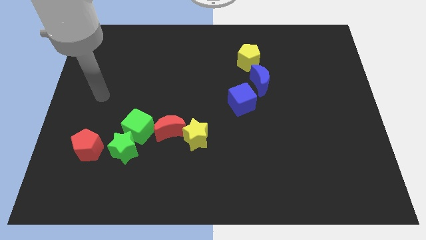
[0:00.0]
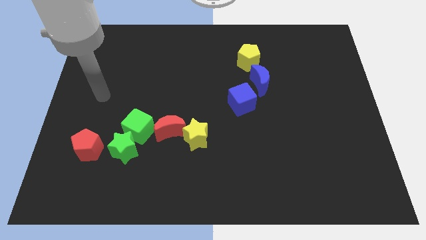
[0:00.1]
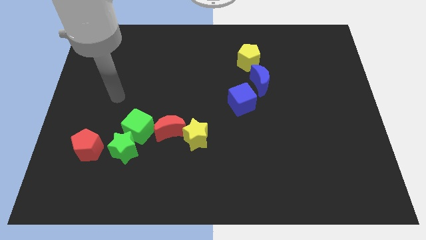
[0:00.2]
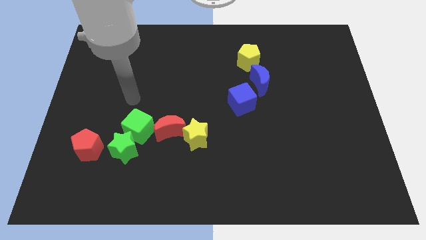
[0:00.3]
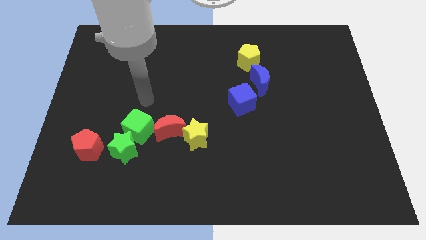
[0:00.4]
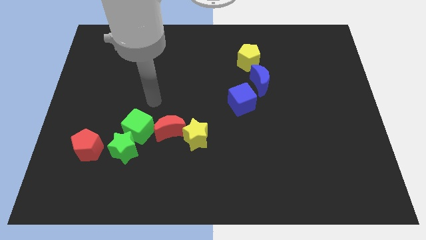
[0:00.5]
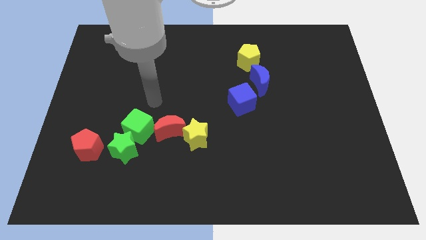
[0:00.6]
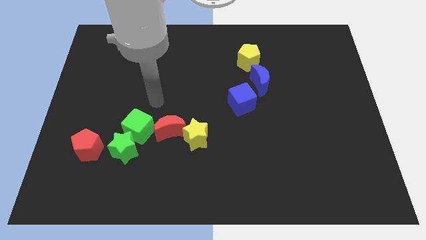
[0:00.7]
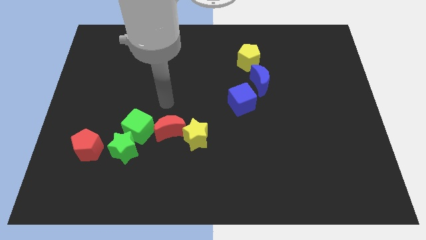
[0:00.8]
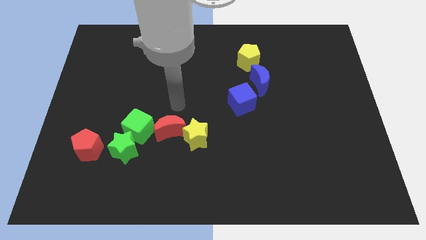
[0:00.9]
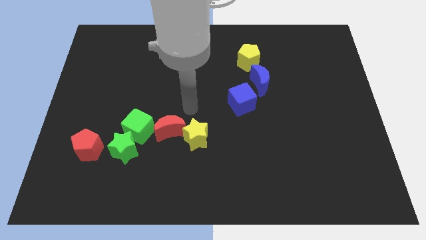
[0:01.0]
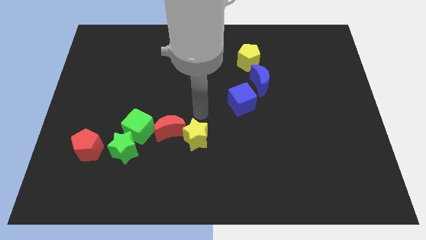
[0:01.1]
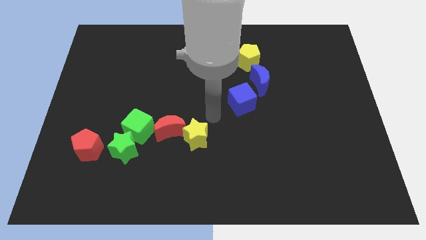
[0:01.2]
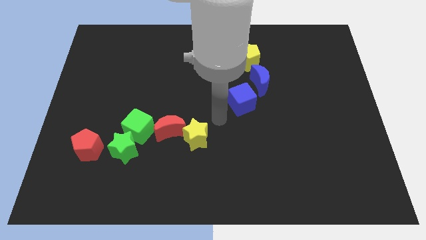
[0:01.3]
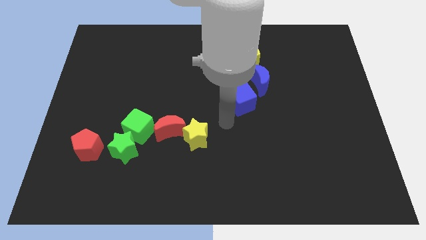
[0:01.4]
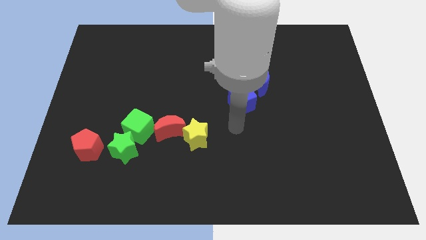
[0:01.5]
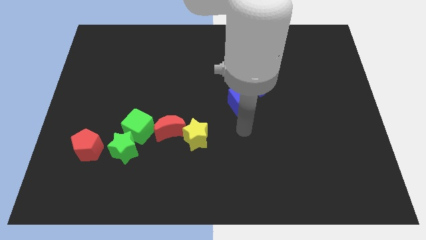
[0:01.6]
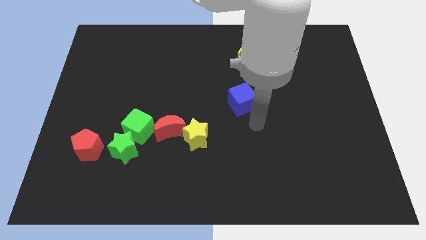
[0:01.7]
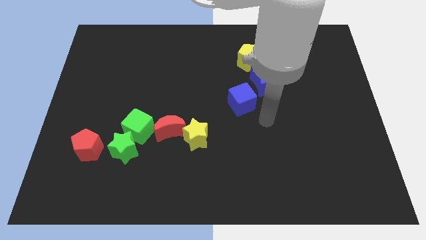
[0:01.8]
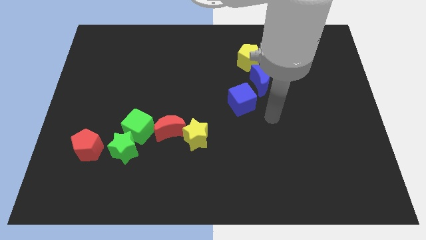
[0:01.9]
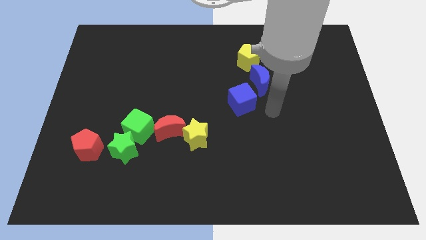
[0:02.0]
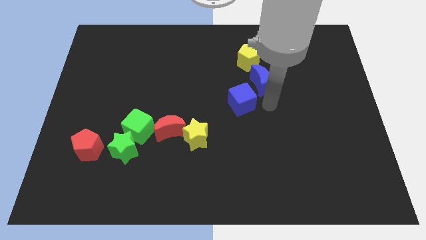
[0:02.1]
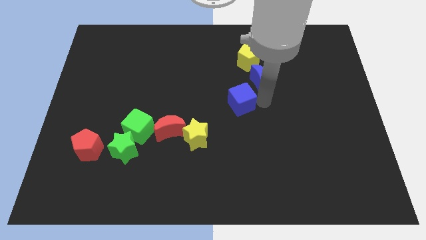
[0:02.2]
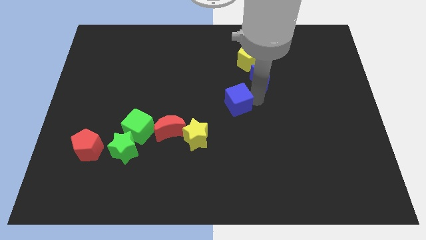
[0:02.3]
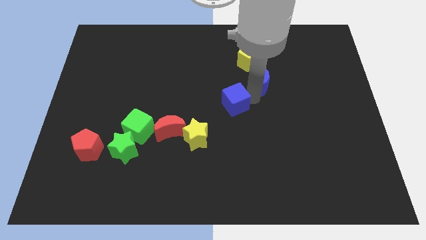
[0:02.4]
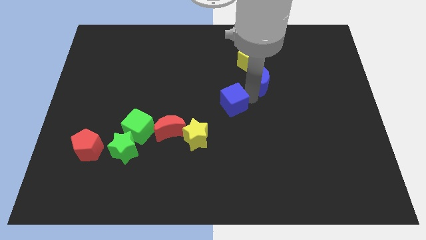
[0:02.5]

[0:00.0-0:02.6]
slightly move the blue cube to the left of the board

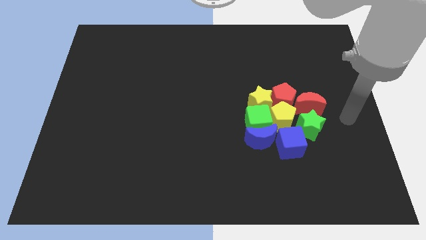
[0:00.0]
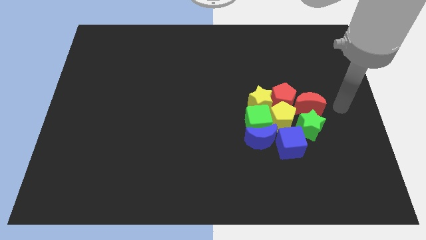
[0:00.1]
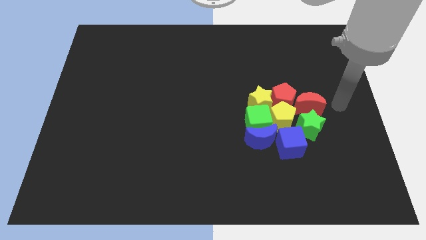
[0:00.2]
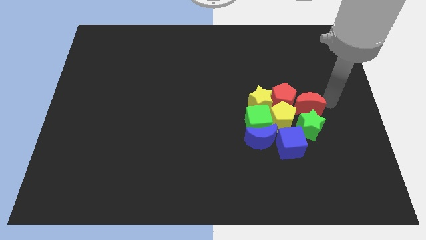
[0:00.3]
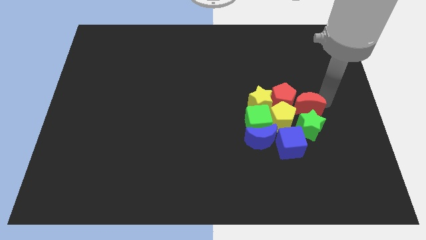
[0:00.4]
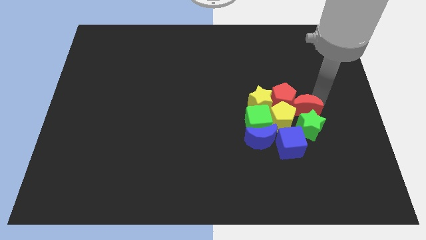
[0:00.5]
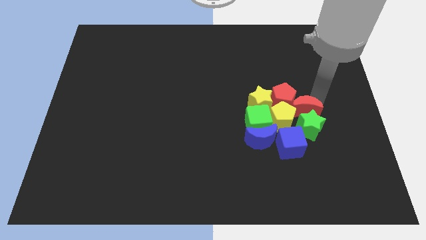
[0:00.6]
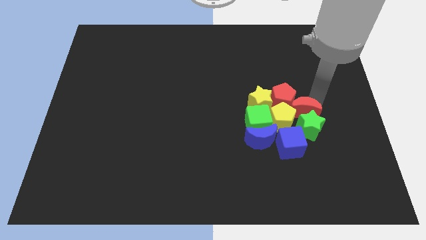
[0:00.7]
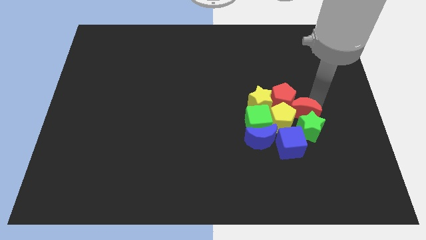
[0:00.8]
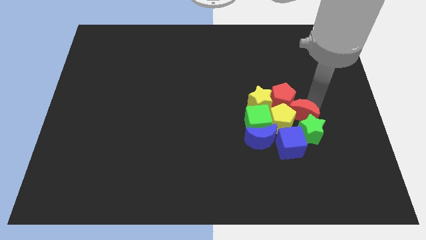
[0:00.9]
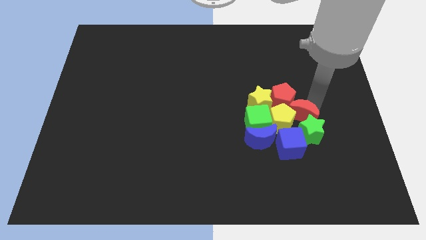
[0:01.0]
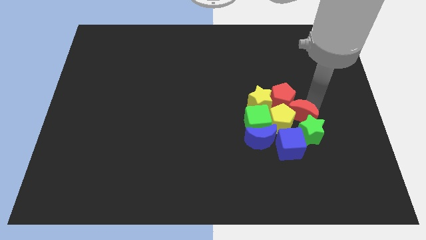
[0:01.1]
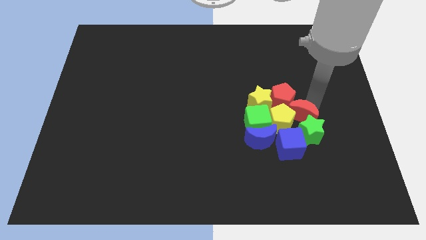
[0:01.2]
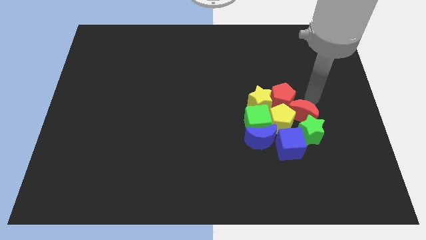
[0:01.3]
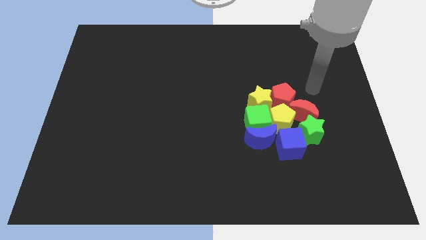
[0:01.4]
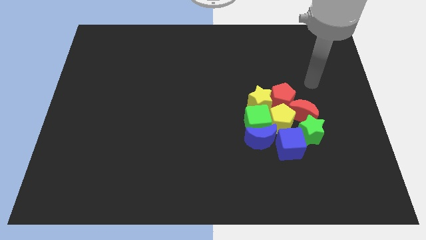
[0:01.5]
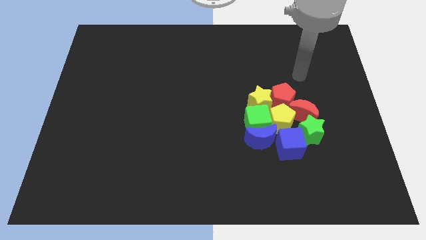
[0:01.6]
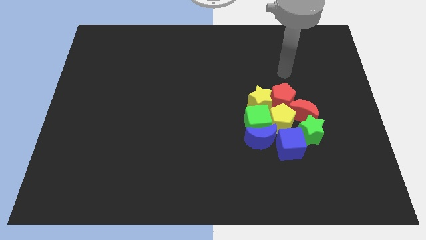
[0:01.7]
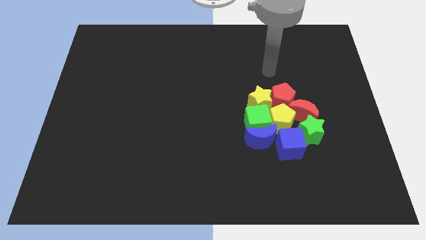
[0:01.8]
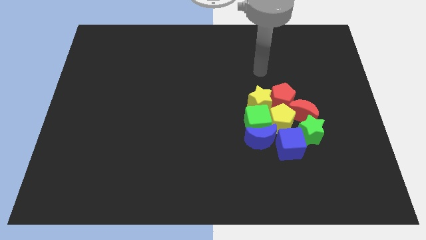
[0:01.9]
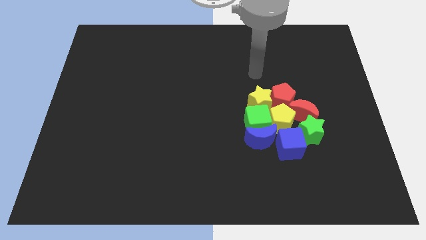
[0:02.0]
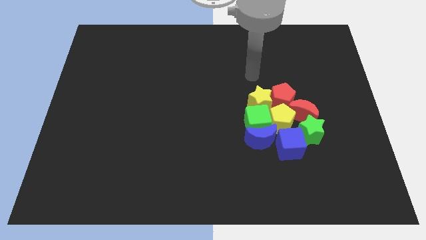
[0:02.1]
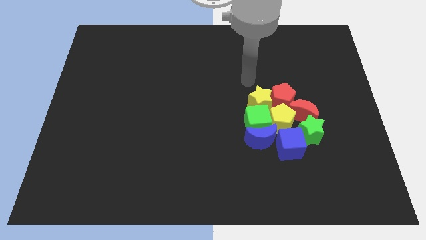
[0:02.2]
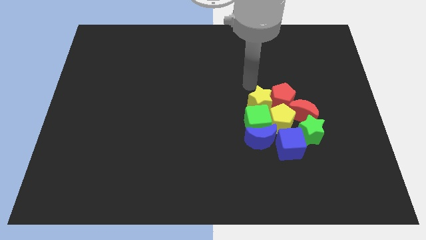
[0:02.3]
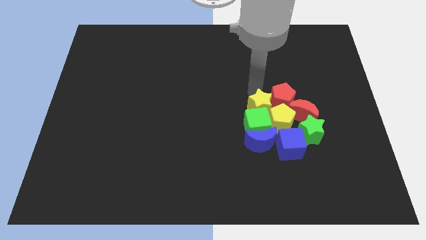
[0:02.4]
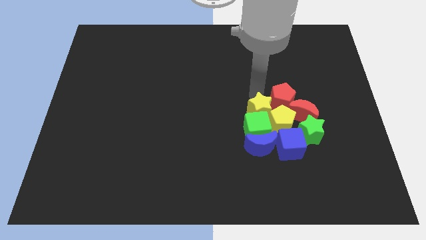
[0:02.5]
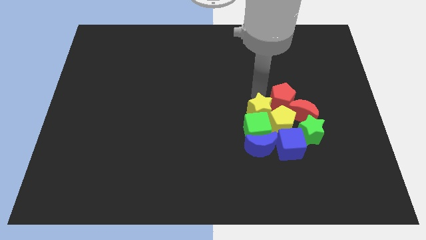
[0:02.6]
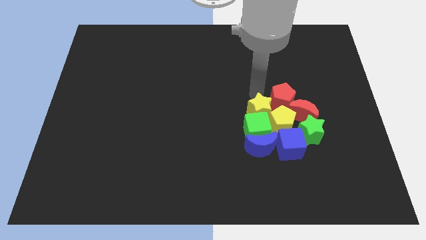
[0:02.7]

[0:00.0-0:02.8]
push the red moon into the green star

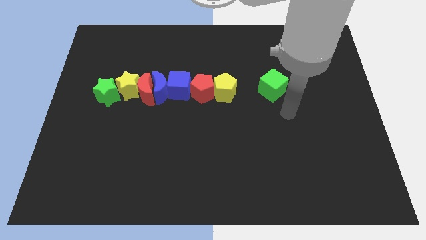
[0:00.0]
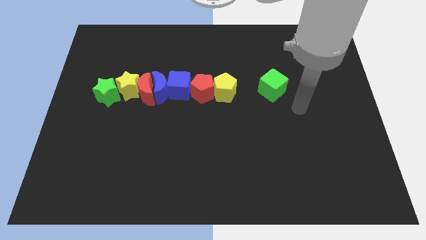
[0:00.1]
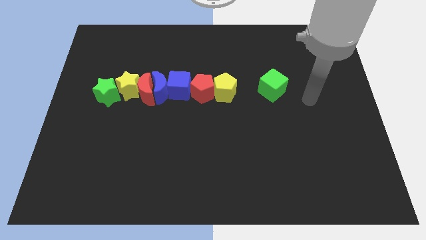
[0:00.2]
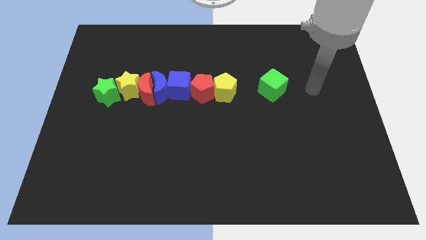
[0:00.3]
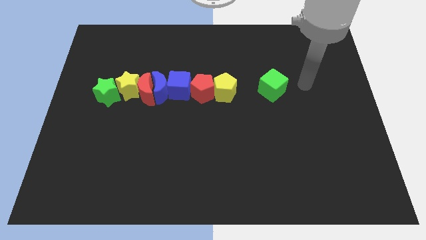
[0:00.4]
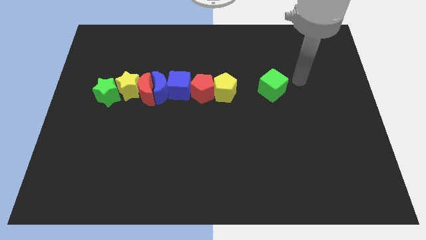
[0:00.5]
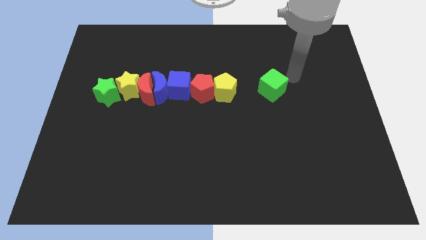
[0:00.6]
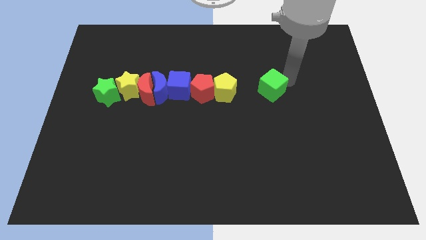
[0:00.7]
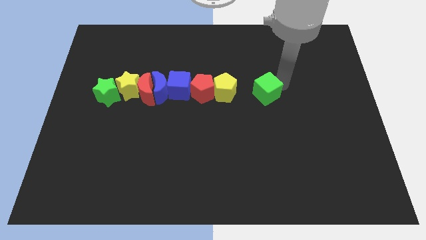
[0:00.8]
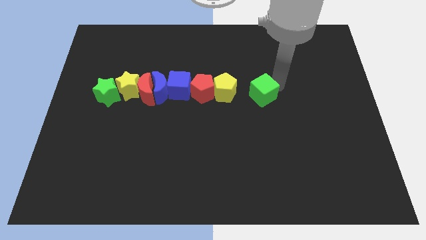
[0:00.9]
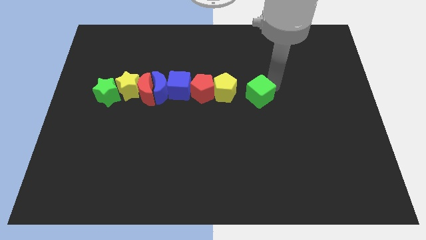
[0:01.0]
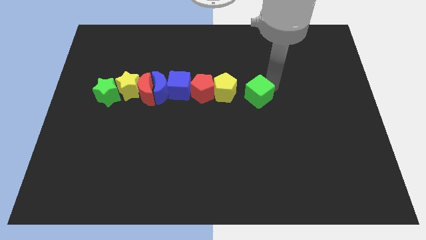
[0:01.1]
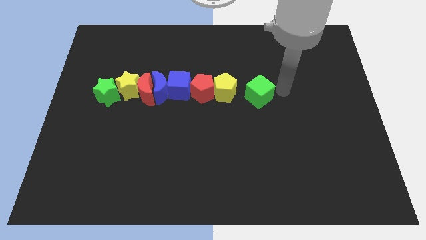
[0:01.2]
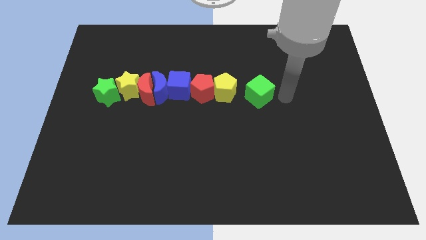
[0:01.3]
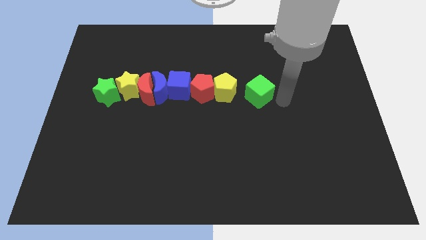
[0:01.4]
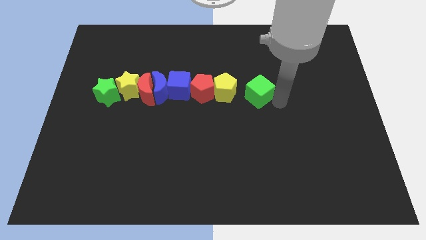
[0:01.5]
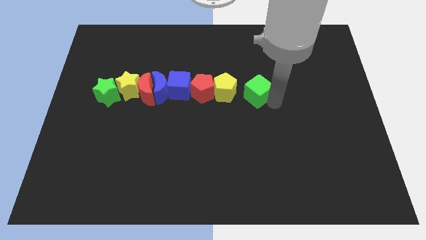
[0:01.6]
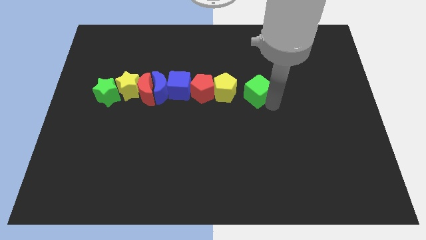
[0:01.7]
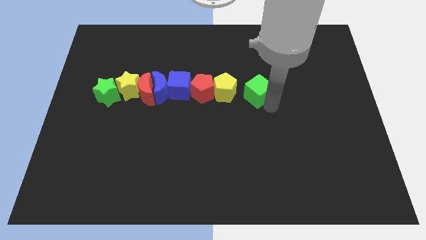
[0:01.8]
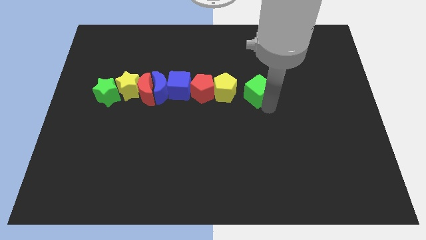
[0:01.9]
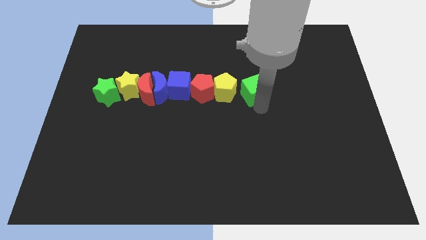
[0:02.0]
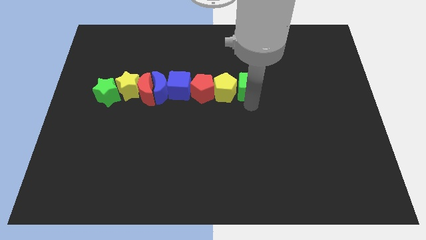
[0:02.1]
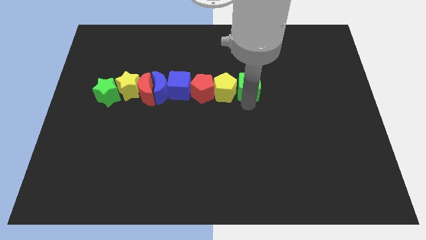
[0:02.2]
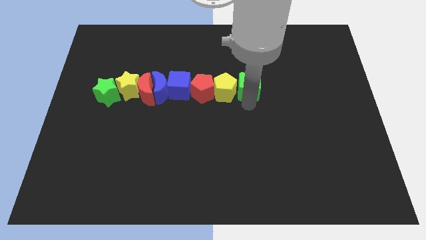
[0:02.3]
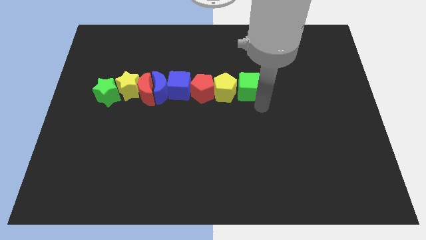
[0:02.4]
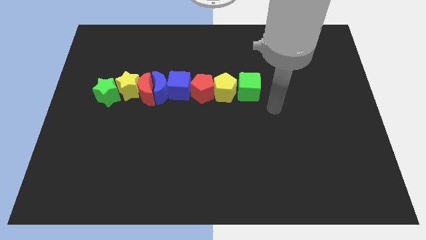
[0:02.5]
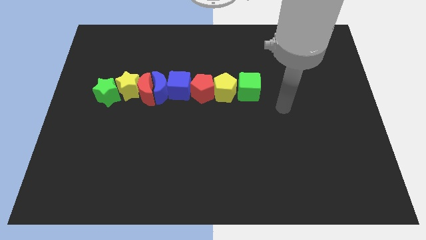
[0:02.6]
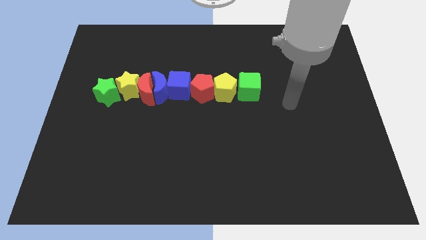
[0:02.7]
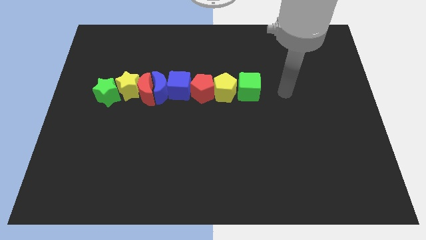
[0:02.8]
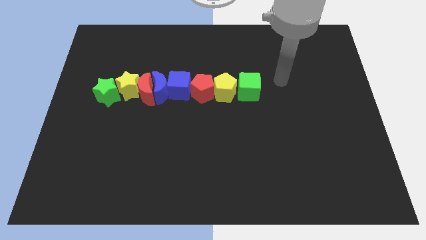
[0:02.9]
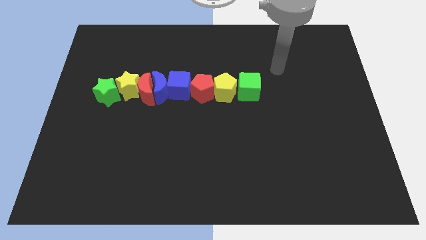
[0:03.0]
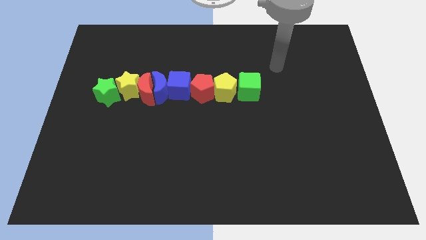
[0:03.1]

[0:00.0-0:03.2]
move green cube to the right of yellow pentagon

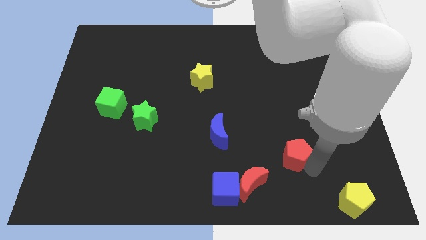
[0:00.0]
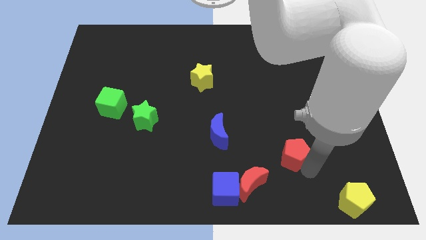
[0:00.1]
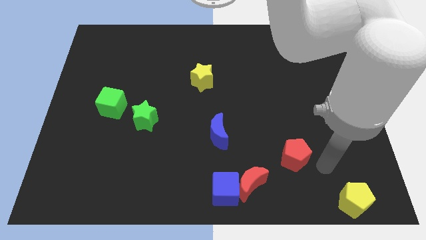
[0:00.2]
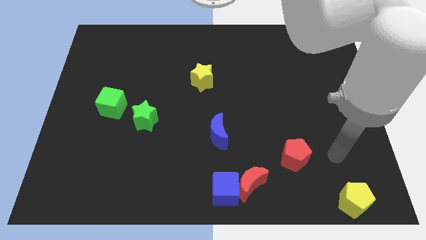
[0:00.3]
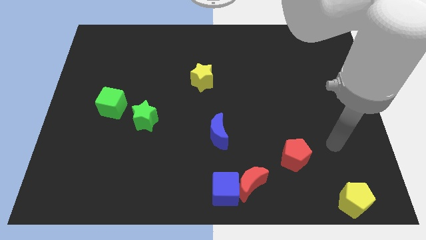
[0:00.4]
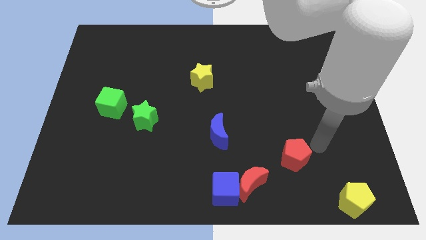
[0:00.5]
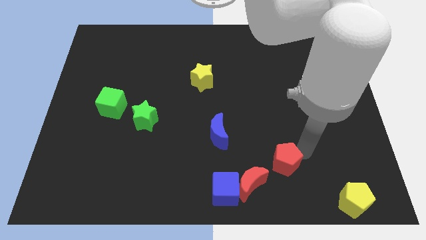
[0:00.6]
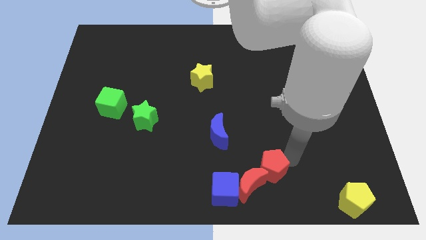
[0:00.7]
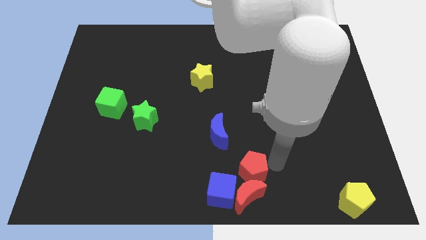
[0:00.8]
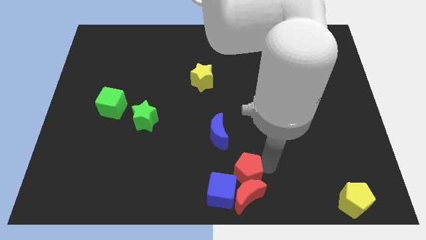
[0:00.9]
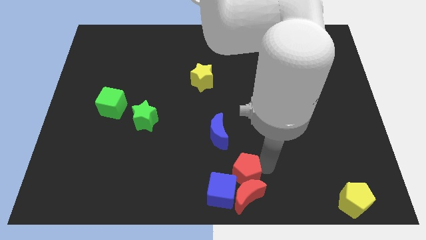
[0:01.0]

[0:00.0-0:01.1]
place red pentagon above the red moon
